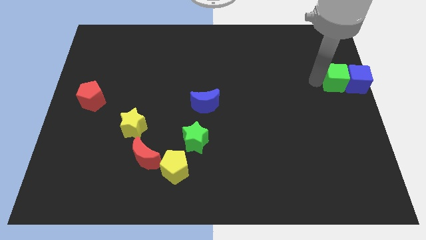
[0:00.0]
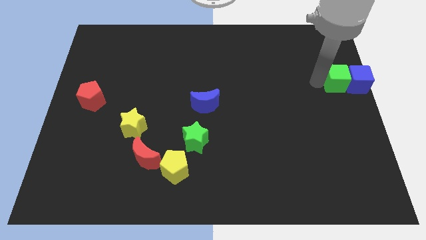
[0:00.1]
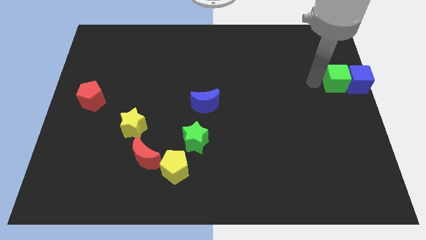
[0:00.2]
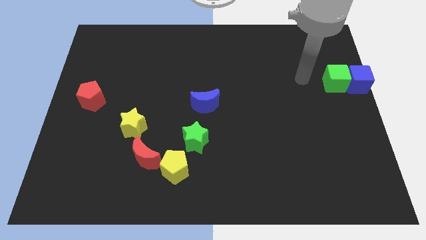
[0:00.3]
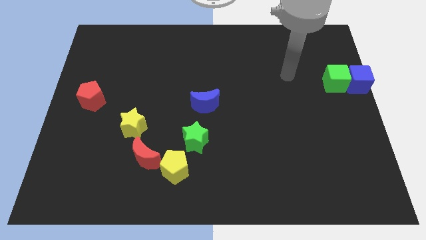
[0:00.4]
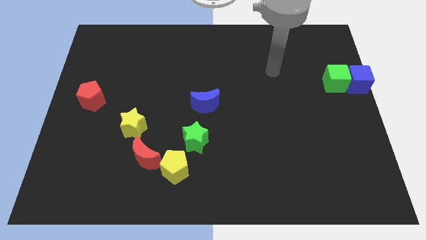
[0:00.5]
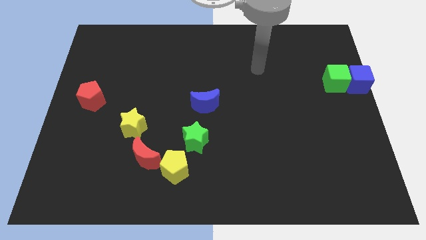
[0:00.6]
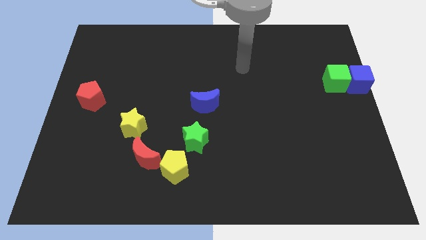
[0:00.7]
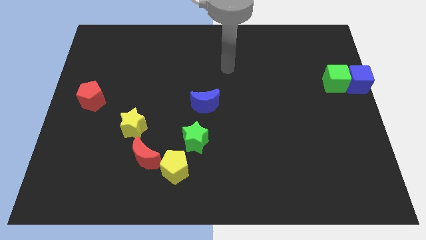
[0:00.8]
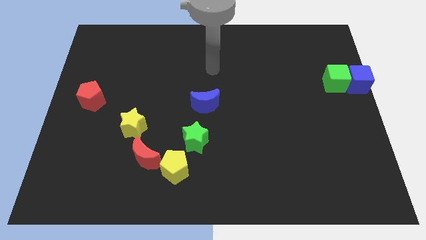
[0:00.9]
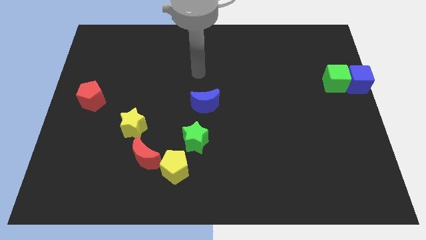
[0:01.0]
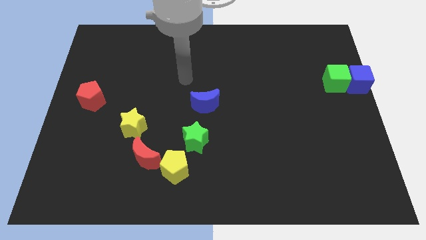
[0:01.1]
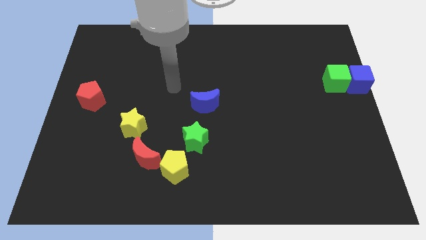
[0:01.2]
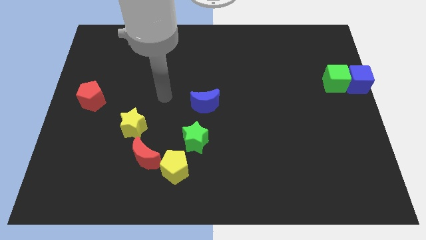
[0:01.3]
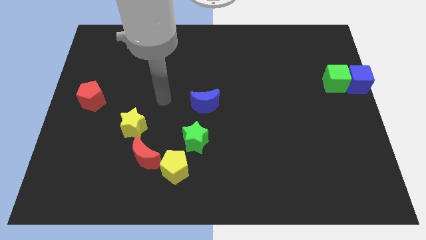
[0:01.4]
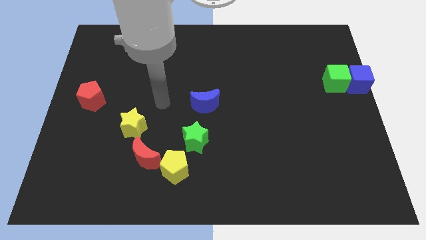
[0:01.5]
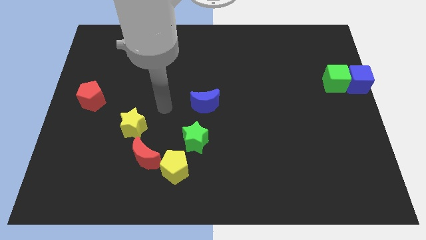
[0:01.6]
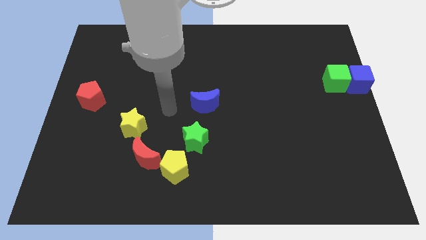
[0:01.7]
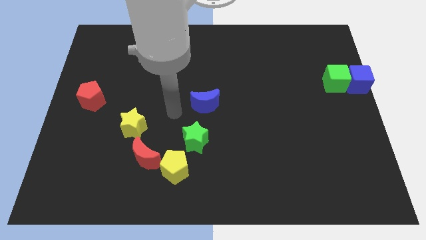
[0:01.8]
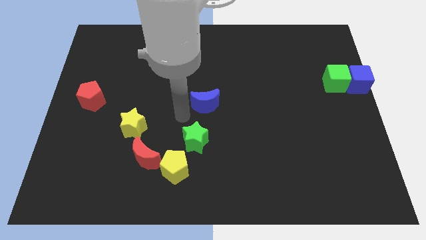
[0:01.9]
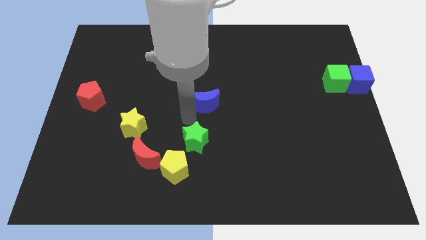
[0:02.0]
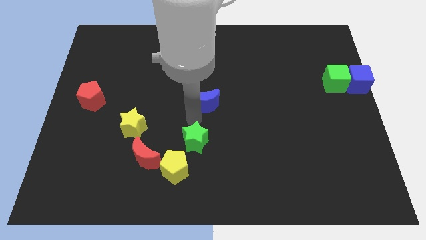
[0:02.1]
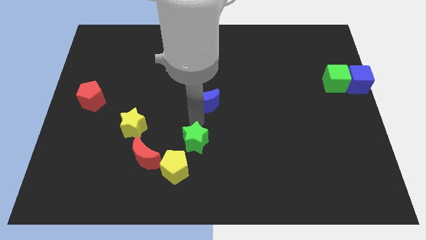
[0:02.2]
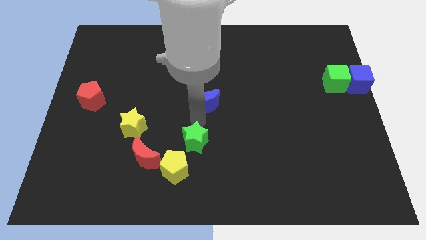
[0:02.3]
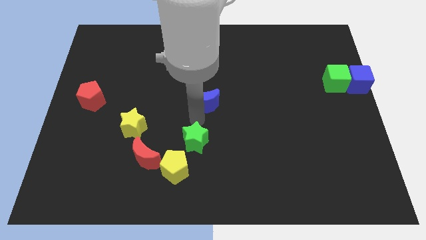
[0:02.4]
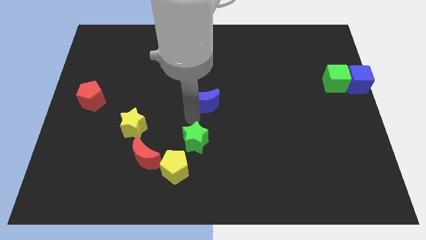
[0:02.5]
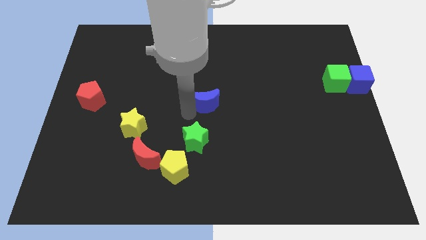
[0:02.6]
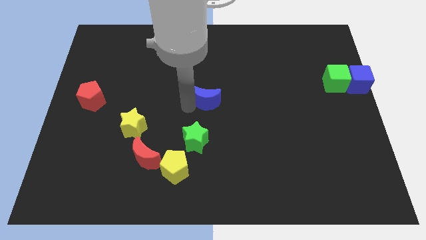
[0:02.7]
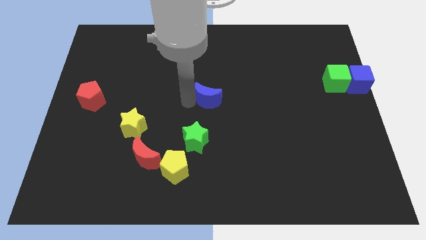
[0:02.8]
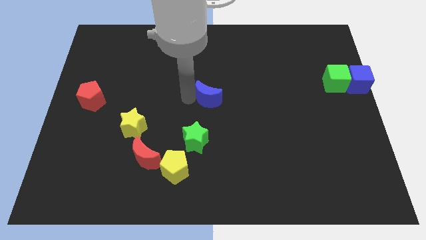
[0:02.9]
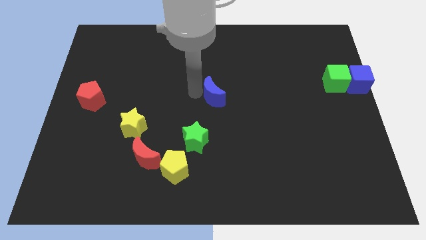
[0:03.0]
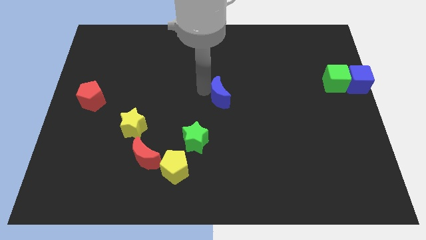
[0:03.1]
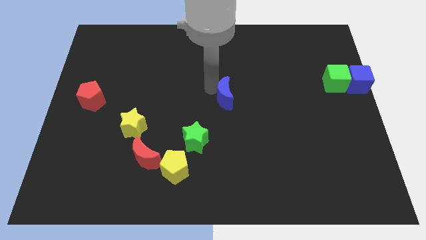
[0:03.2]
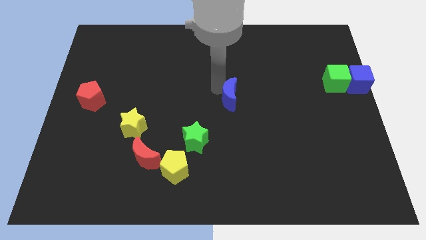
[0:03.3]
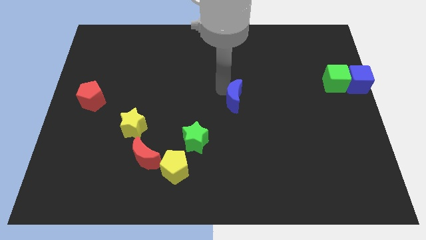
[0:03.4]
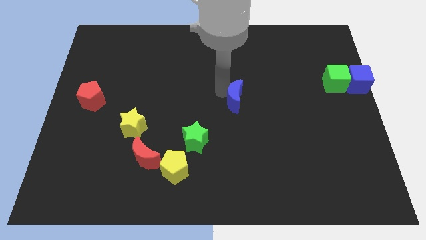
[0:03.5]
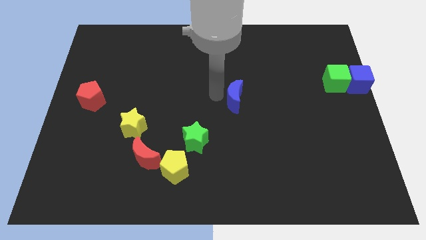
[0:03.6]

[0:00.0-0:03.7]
move the blue moon diagonally top right to the green star

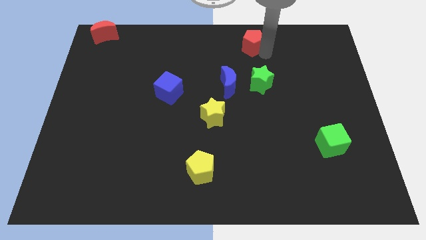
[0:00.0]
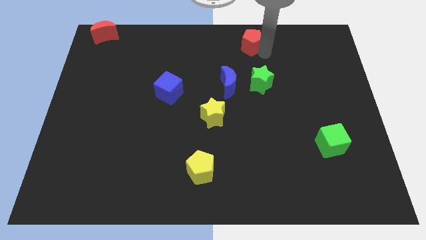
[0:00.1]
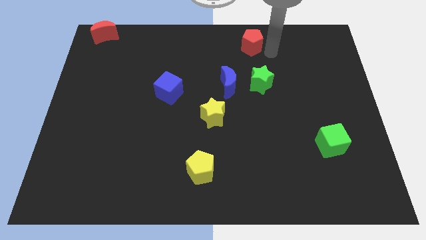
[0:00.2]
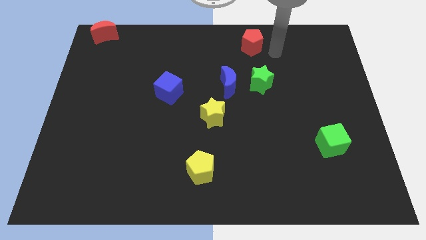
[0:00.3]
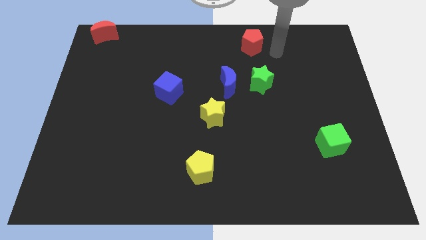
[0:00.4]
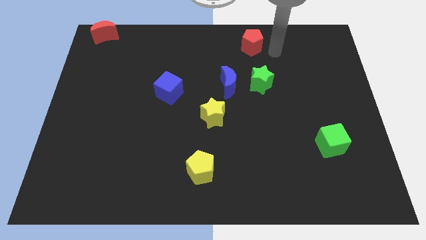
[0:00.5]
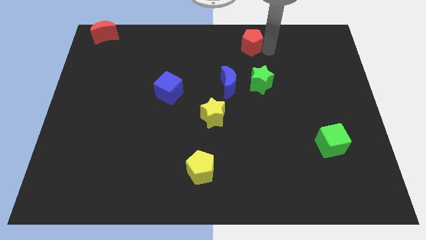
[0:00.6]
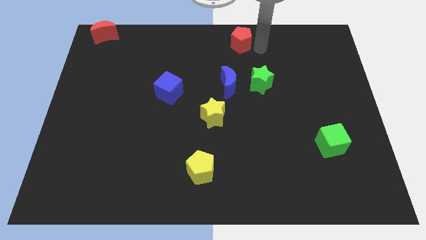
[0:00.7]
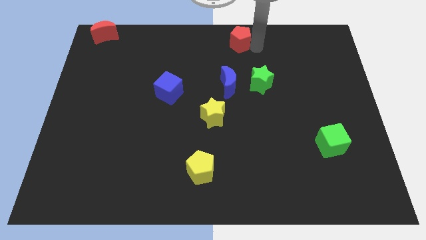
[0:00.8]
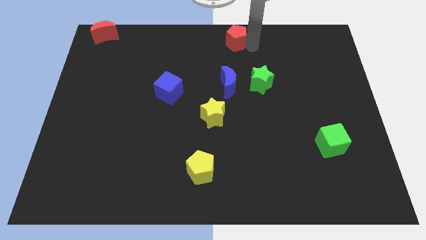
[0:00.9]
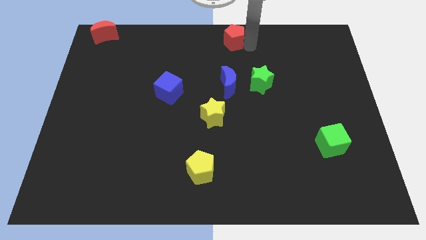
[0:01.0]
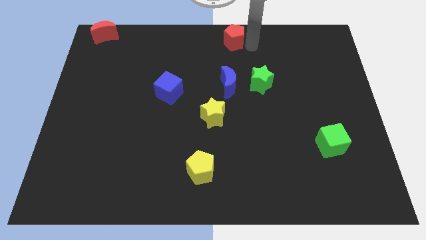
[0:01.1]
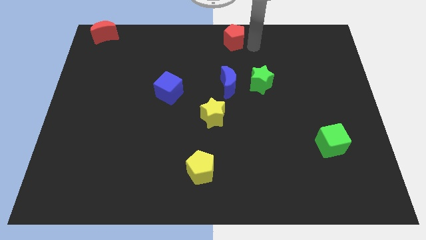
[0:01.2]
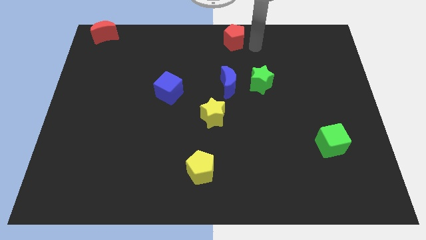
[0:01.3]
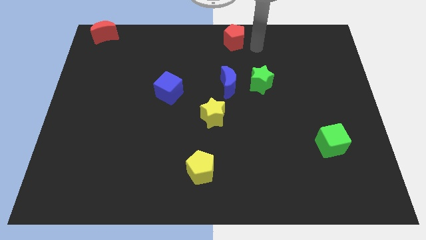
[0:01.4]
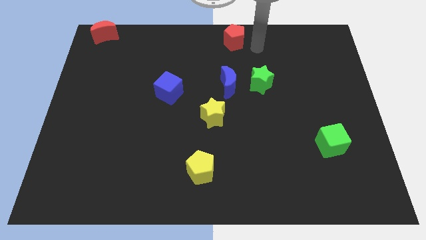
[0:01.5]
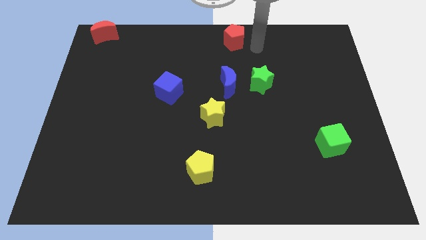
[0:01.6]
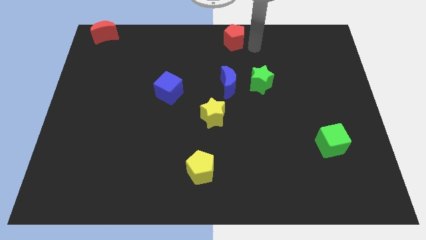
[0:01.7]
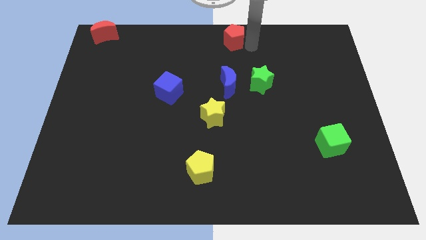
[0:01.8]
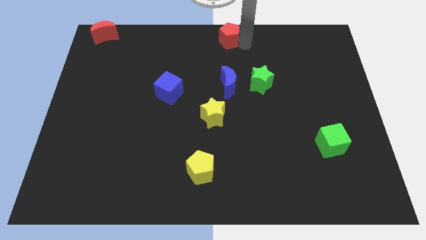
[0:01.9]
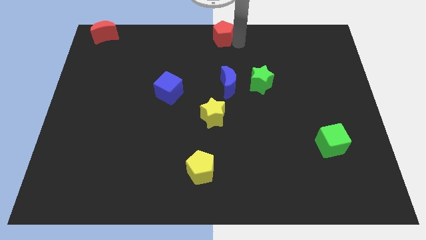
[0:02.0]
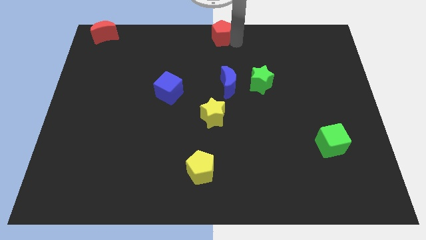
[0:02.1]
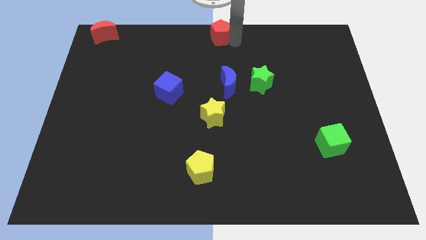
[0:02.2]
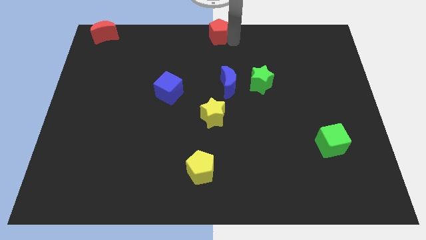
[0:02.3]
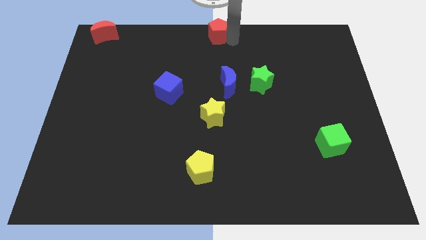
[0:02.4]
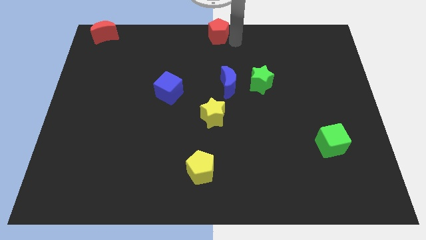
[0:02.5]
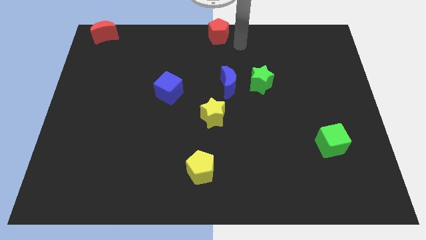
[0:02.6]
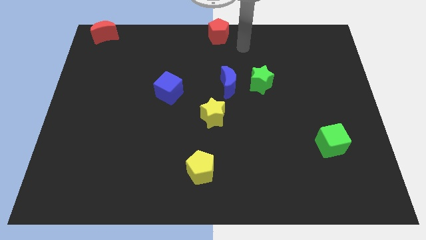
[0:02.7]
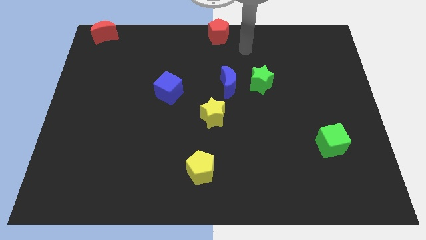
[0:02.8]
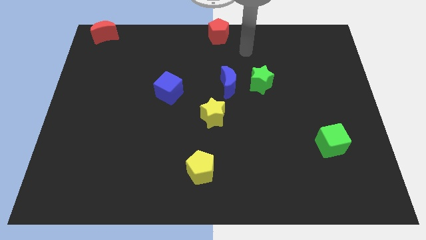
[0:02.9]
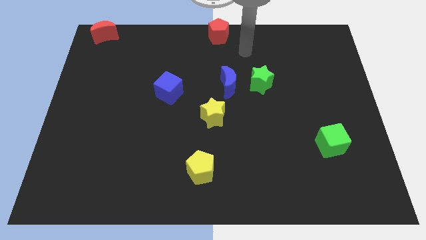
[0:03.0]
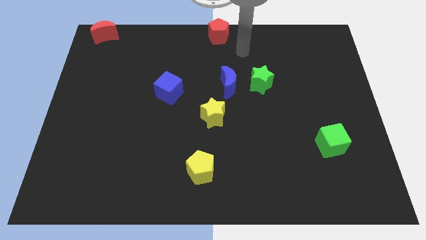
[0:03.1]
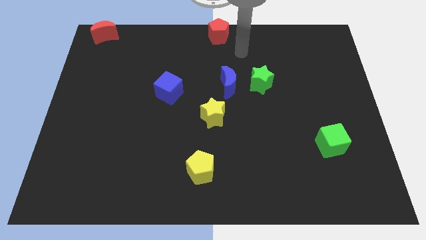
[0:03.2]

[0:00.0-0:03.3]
place the red pentagon at the top center of the board

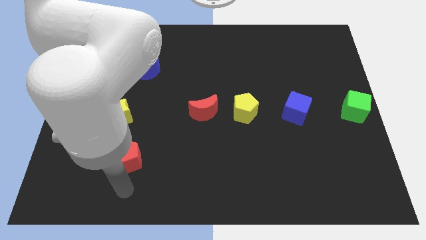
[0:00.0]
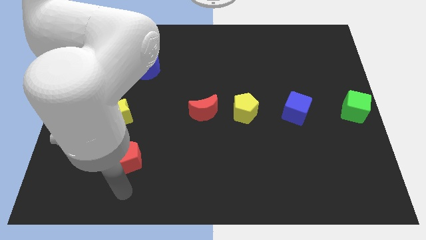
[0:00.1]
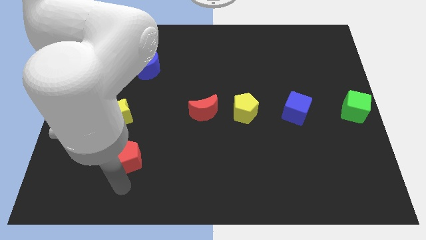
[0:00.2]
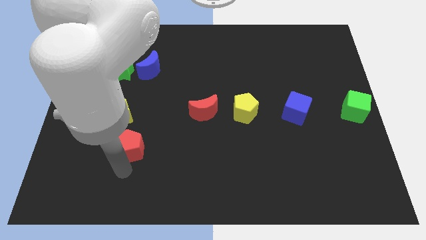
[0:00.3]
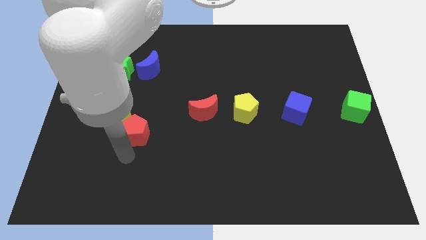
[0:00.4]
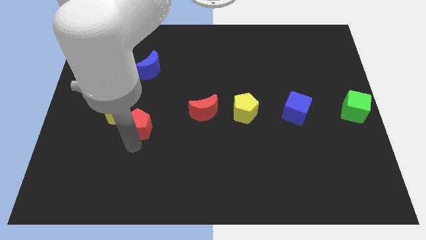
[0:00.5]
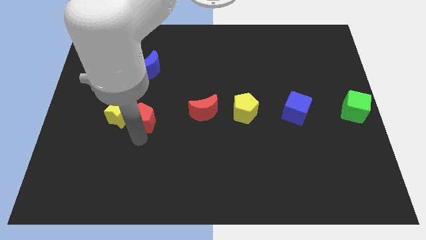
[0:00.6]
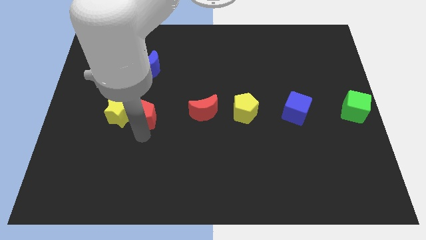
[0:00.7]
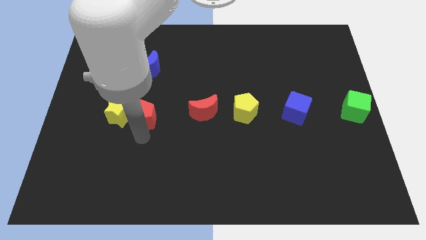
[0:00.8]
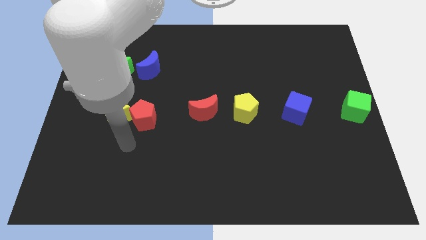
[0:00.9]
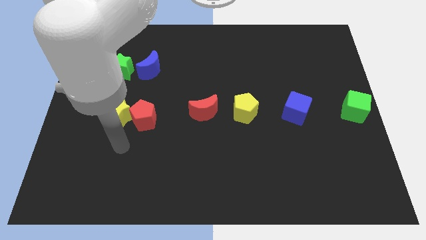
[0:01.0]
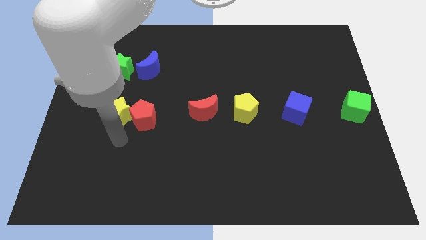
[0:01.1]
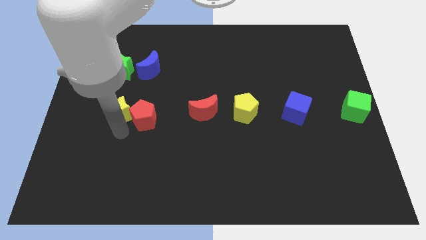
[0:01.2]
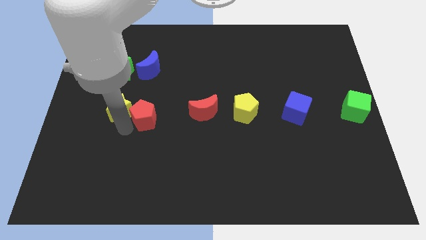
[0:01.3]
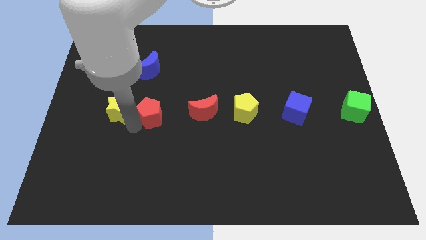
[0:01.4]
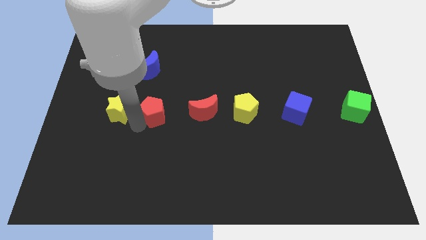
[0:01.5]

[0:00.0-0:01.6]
push the red pentagon to the right of the yellow star

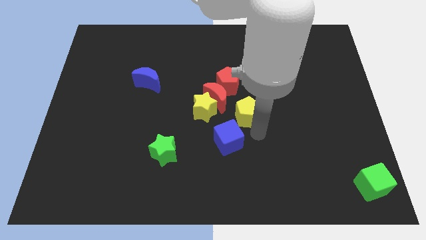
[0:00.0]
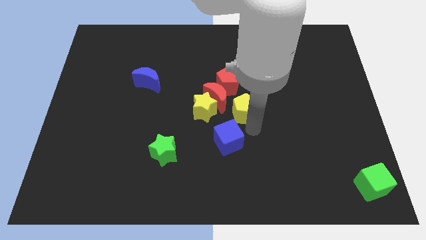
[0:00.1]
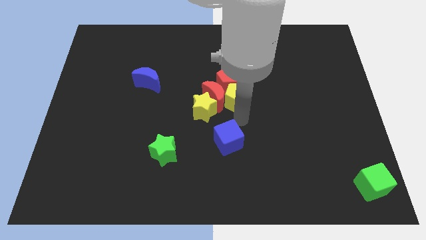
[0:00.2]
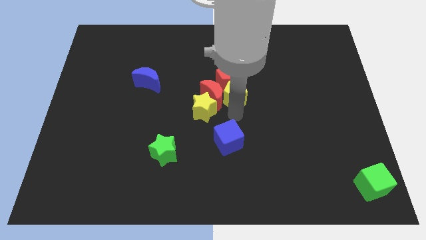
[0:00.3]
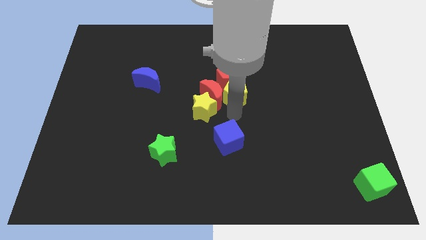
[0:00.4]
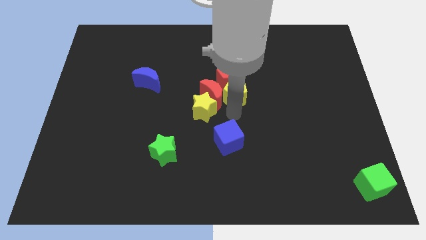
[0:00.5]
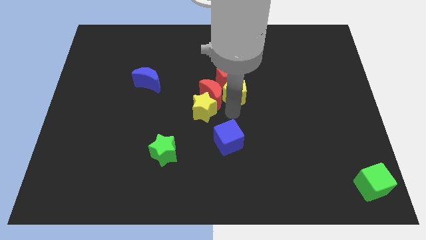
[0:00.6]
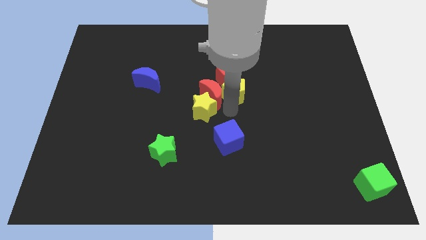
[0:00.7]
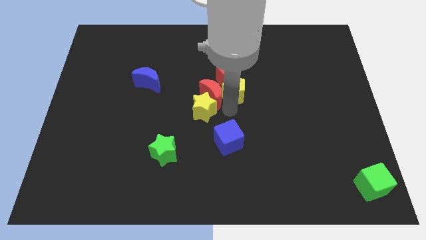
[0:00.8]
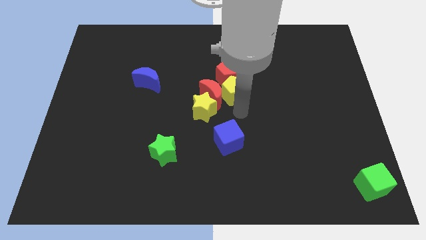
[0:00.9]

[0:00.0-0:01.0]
push the yellow pentagon towards the red blocks
